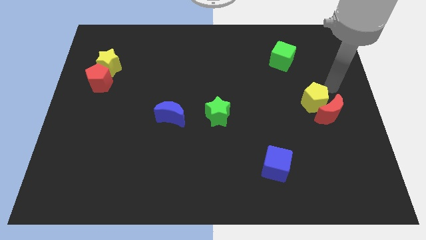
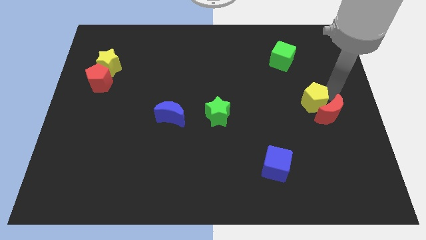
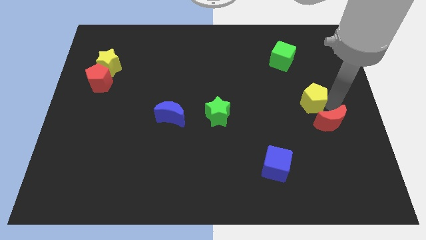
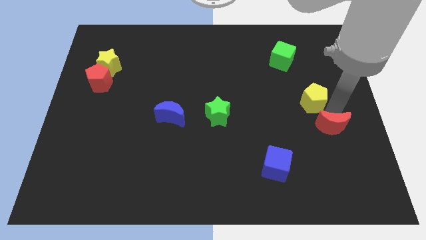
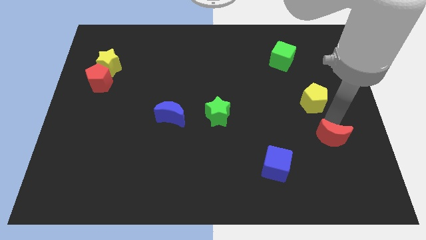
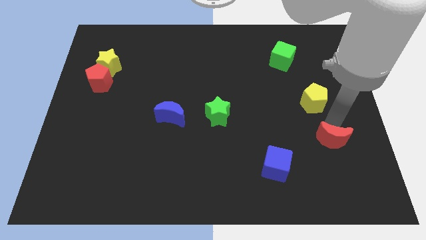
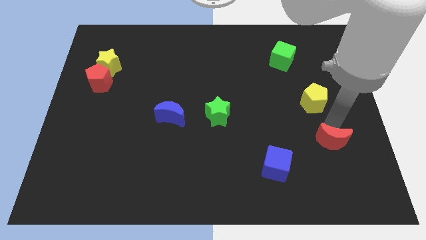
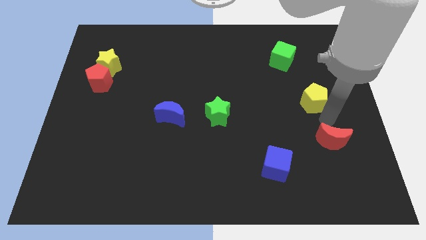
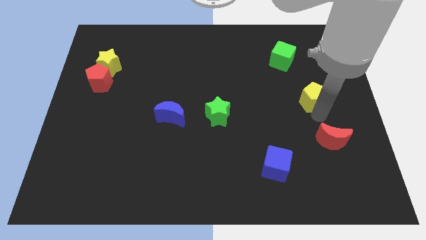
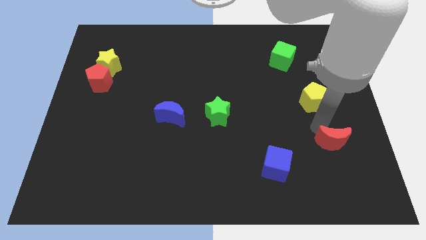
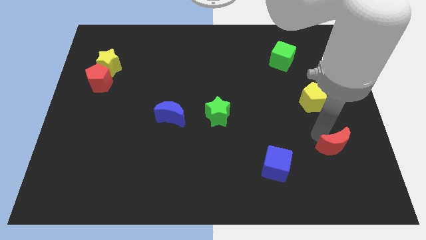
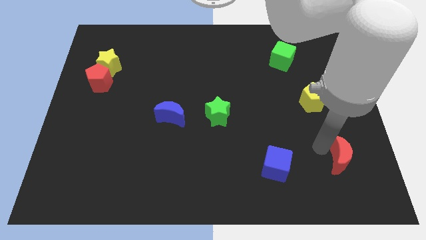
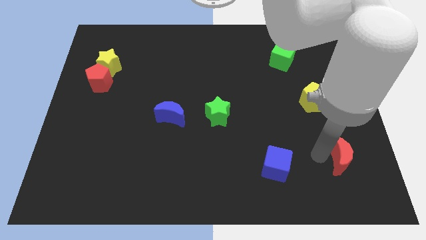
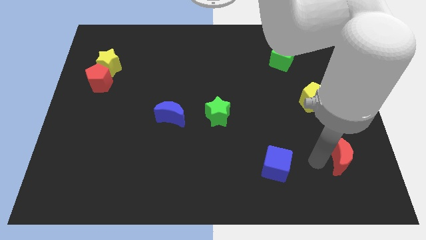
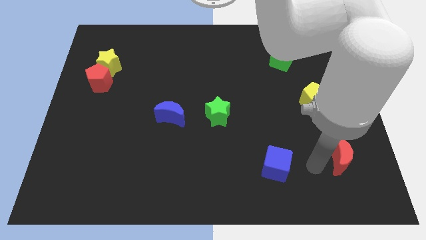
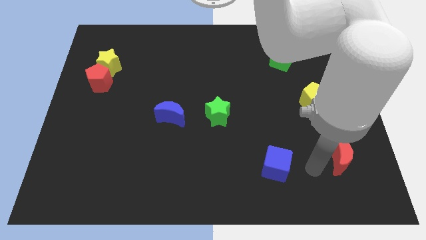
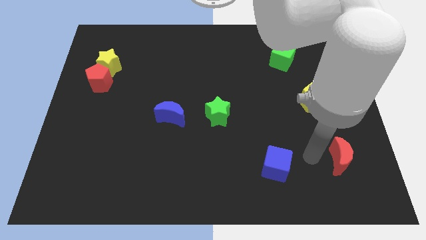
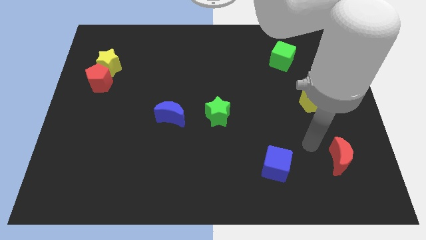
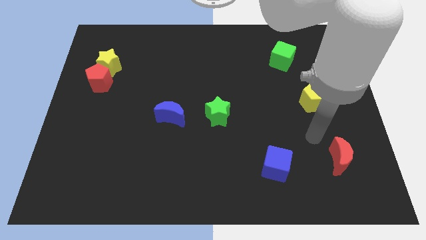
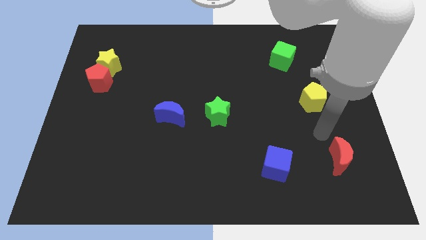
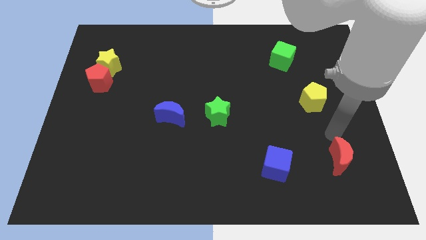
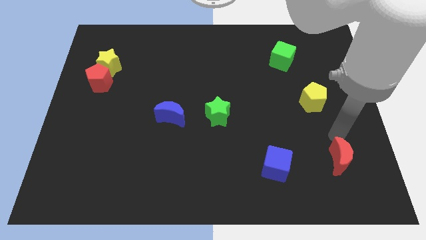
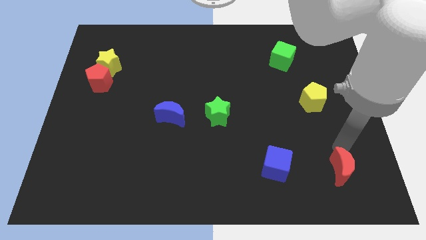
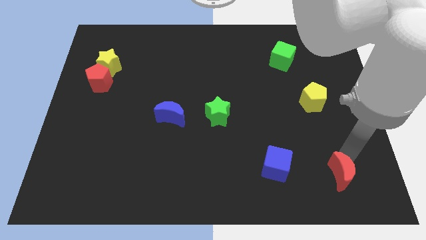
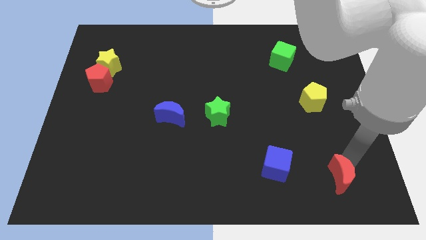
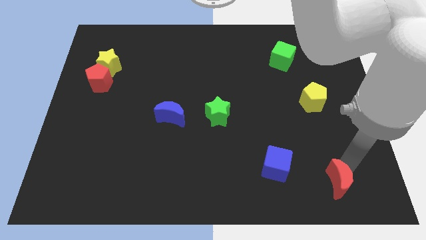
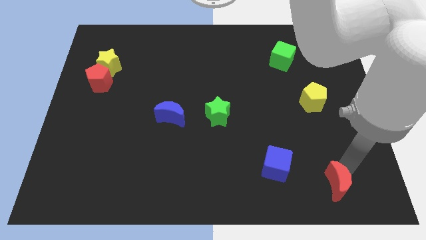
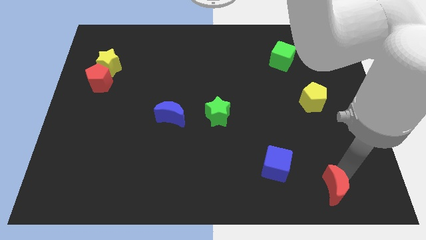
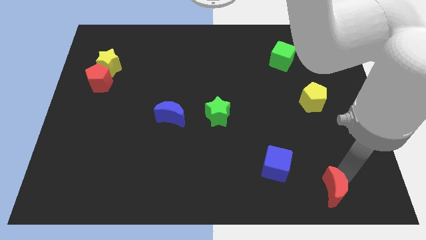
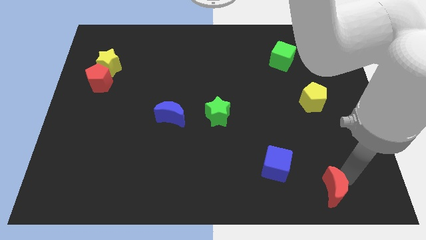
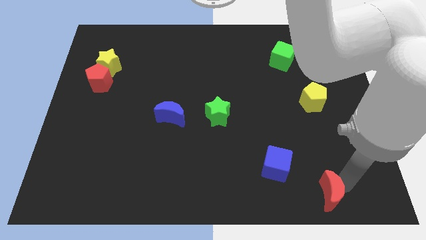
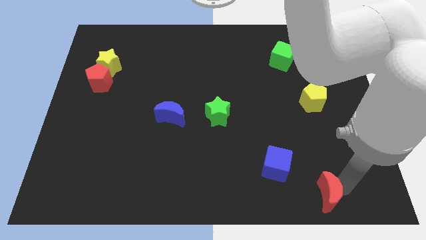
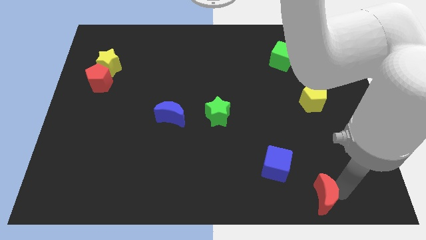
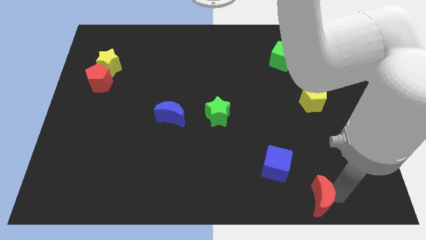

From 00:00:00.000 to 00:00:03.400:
move red moon to the bottom of the board

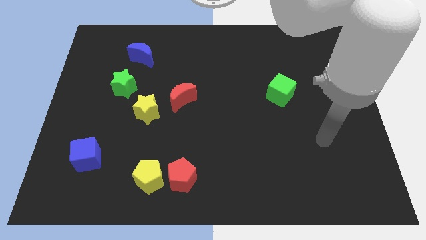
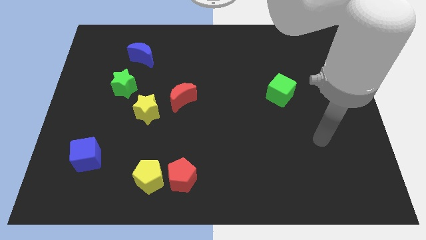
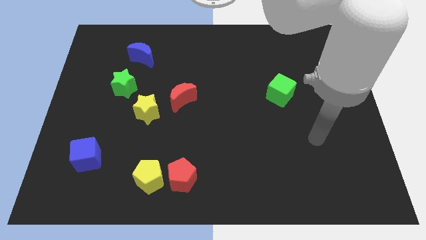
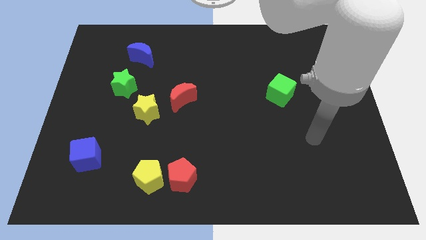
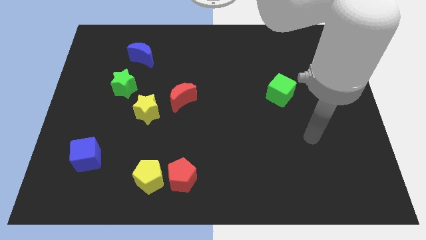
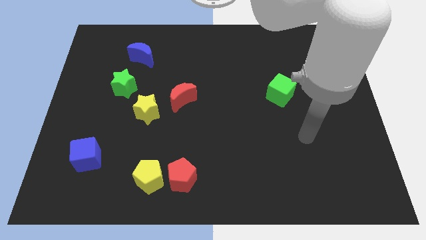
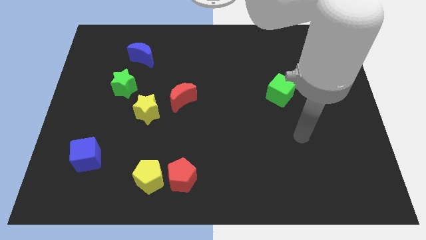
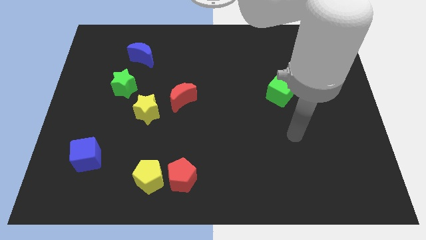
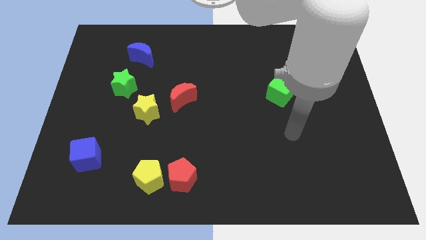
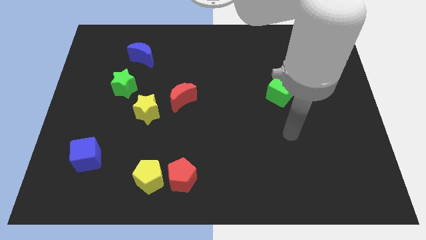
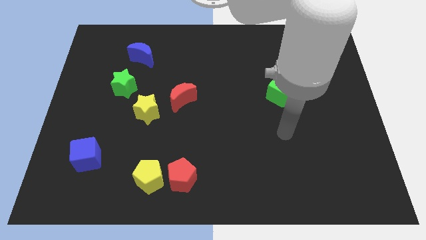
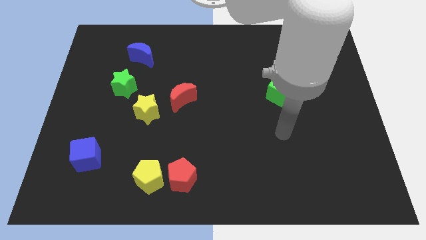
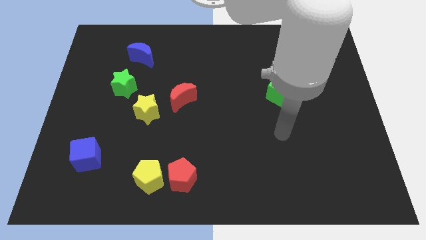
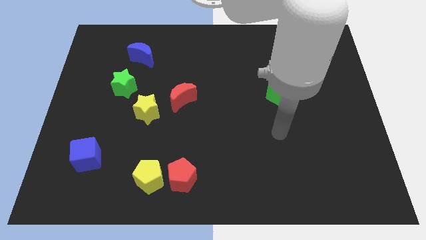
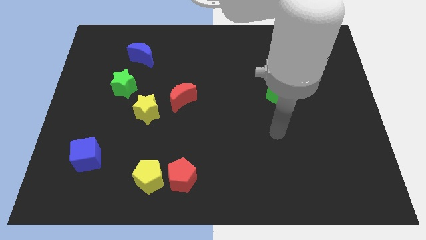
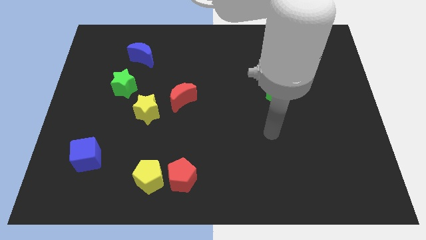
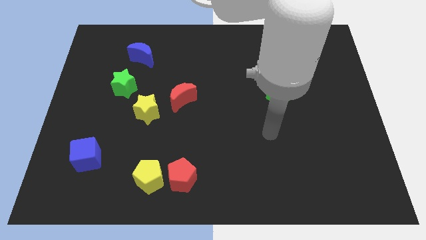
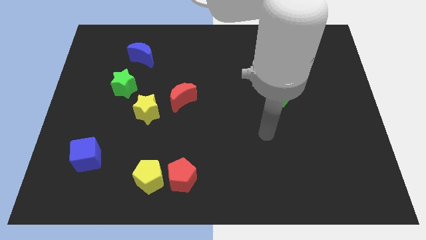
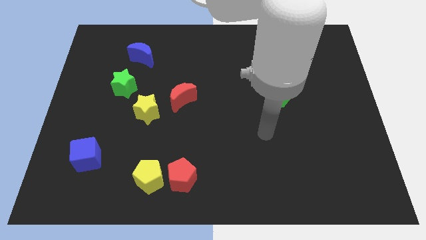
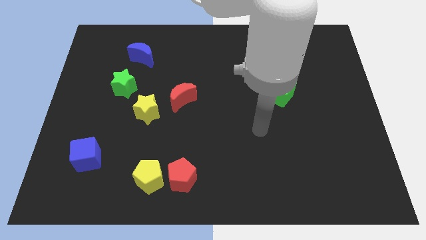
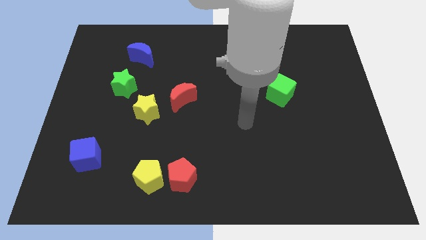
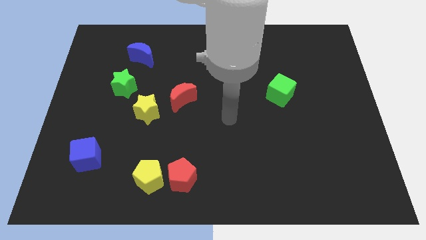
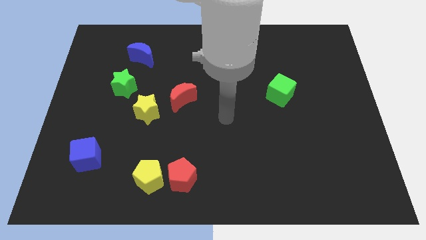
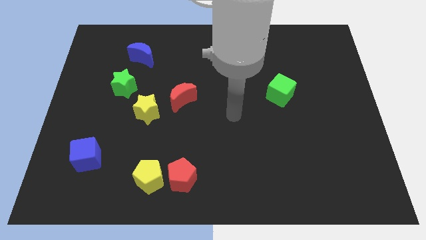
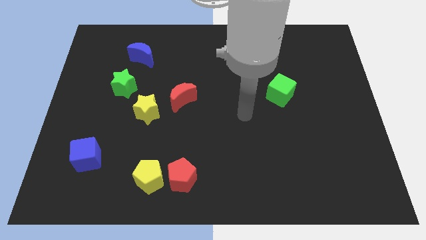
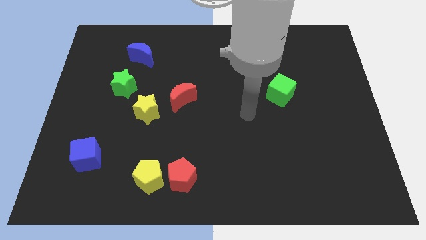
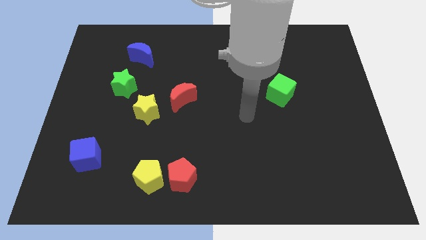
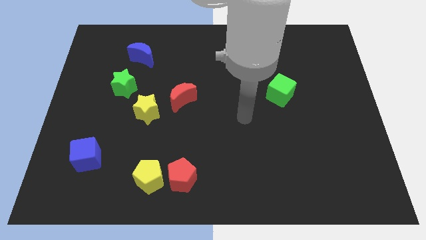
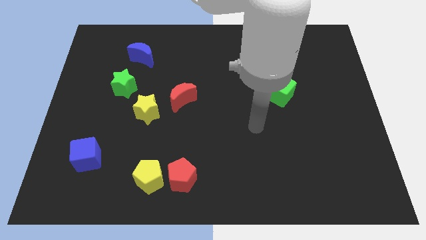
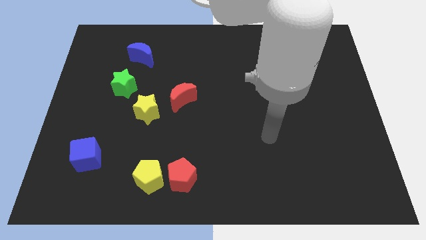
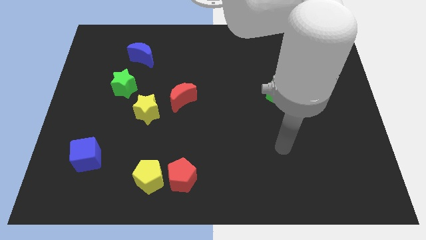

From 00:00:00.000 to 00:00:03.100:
move hand at the bottom of the green cube

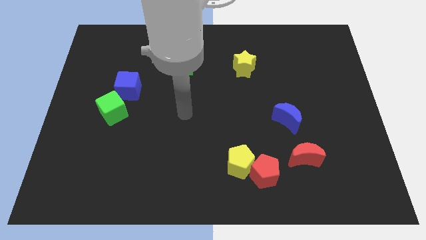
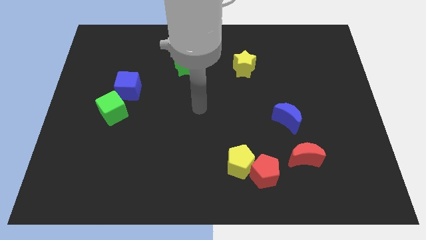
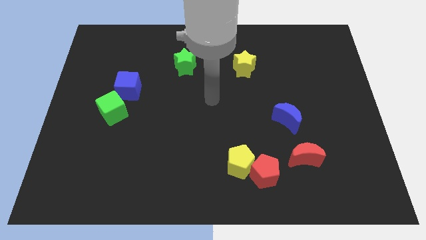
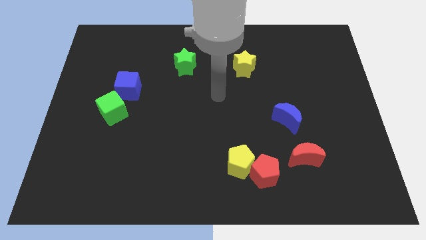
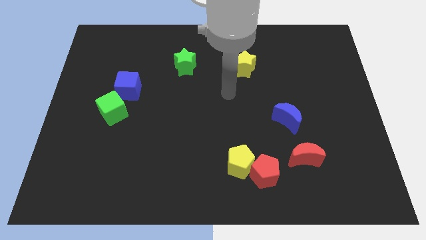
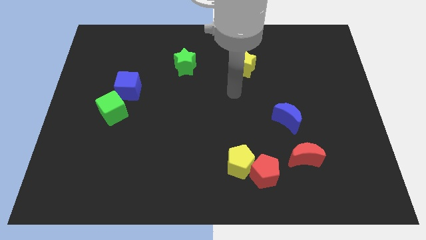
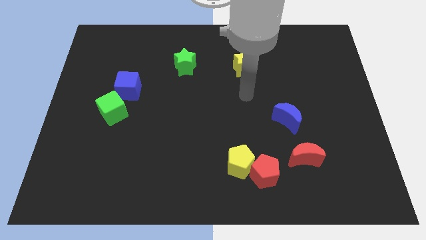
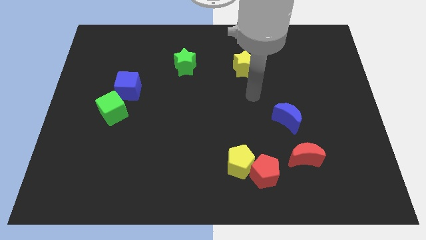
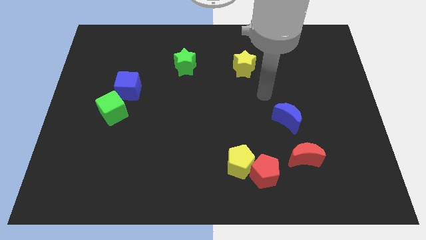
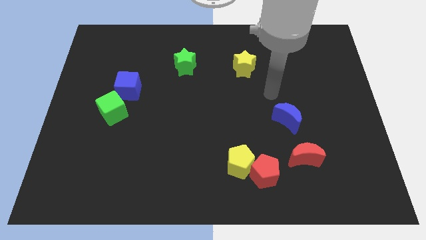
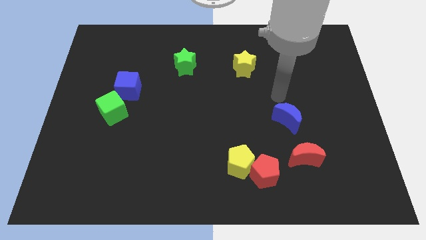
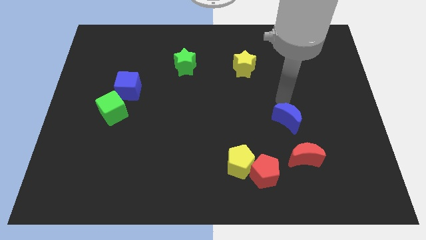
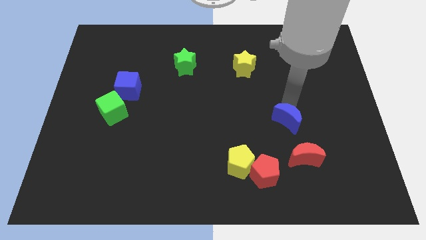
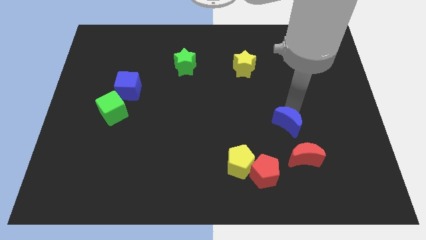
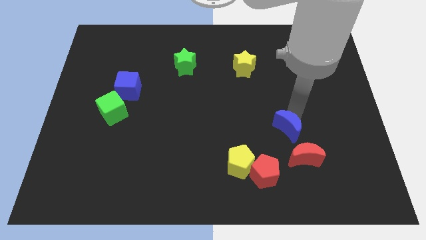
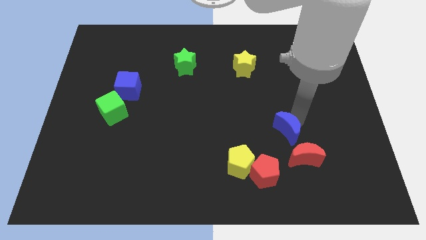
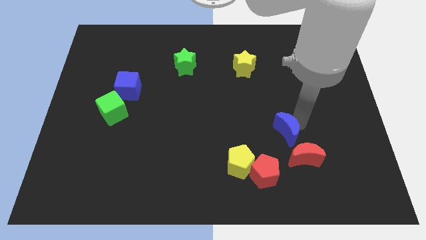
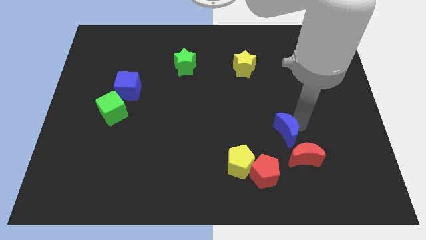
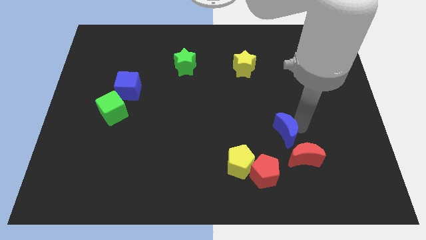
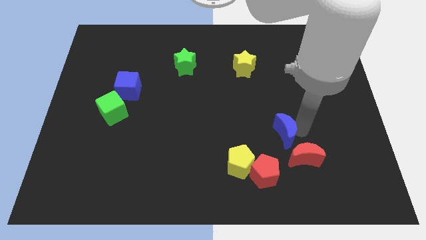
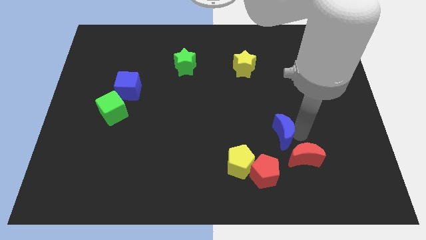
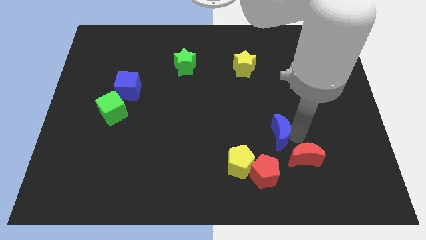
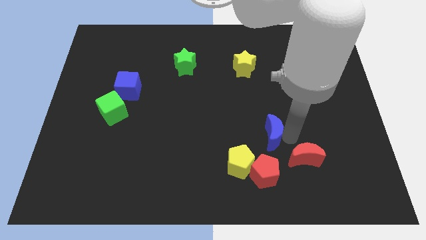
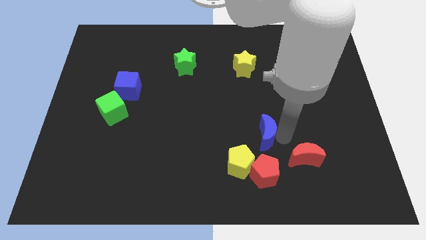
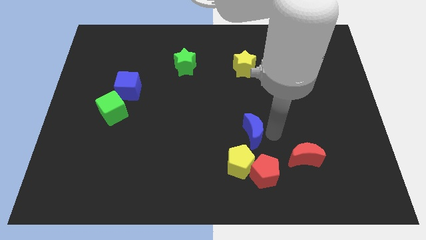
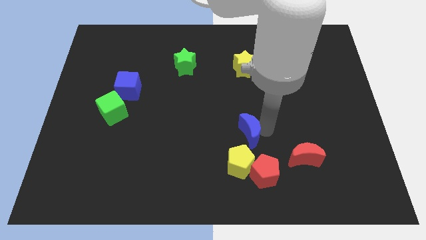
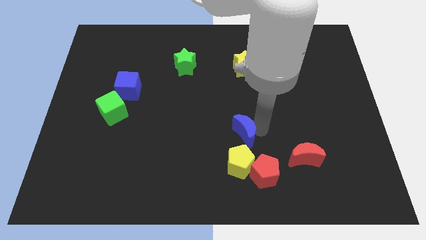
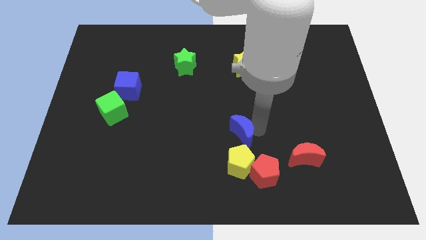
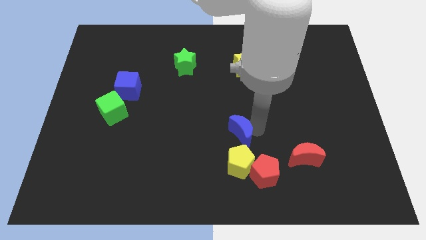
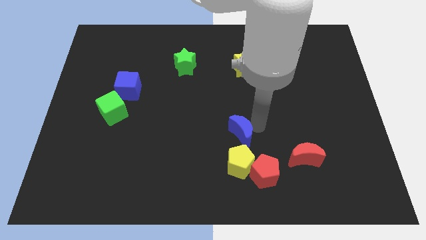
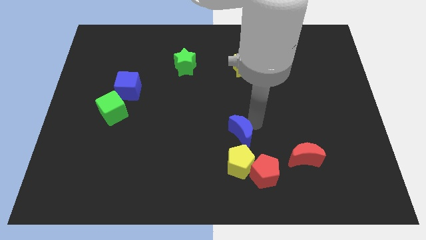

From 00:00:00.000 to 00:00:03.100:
place the blue crescent at the top of the yellow pentagon
